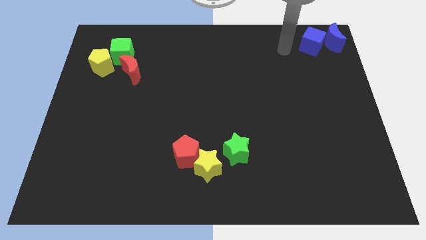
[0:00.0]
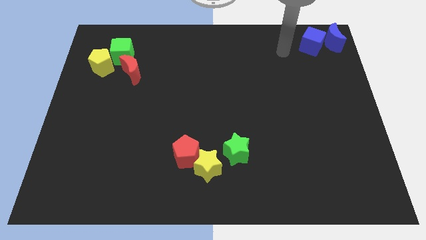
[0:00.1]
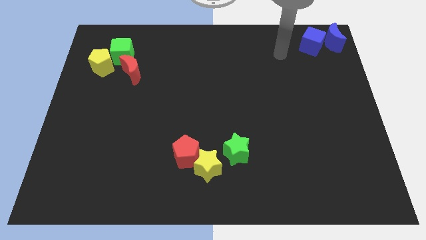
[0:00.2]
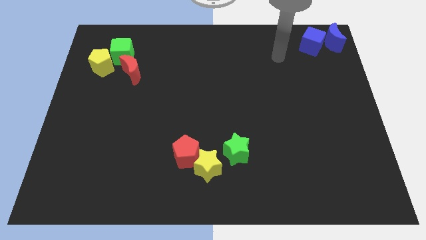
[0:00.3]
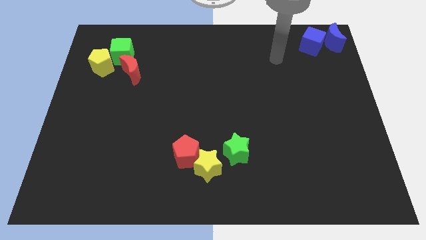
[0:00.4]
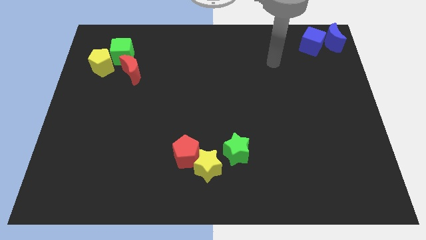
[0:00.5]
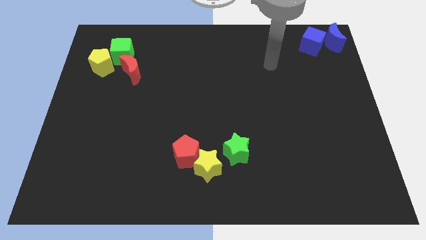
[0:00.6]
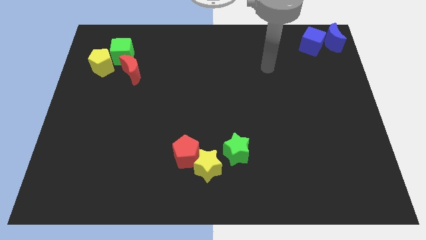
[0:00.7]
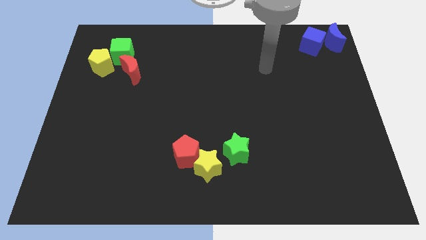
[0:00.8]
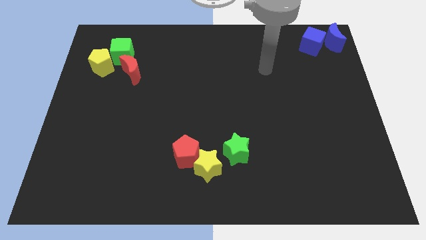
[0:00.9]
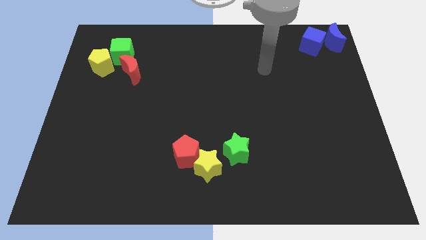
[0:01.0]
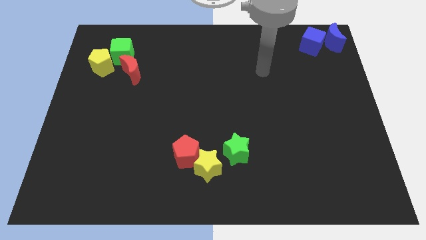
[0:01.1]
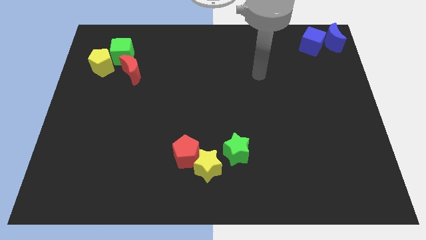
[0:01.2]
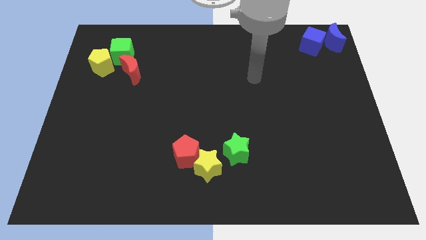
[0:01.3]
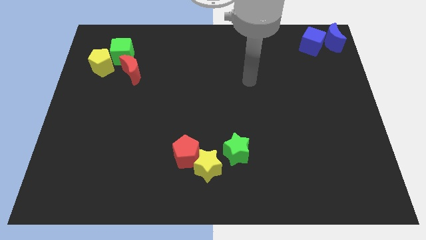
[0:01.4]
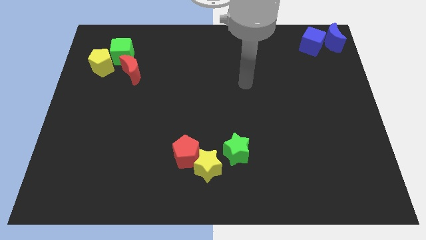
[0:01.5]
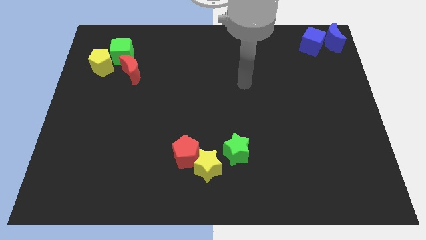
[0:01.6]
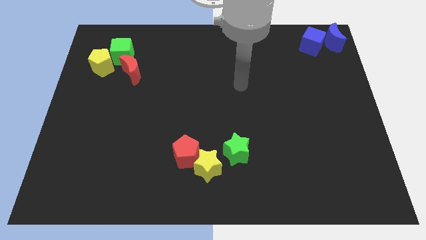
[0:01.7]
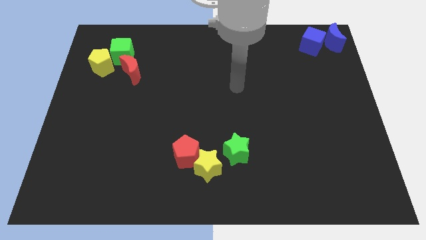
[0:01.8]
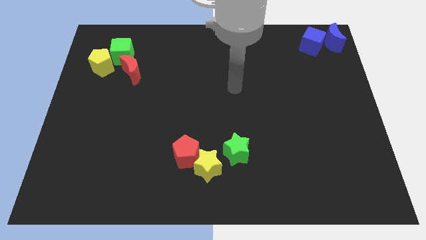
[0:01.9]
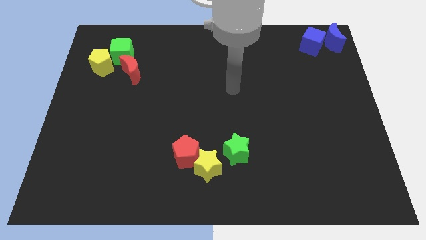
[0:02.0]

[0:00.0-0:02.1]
place your hand at center of the board

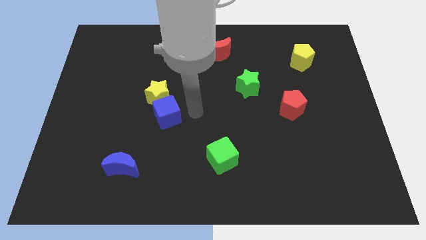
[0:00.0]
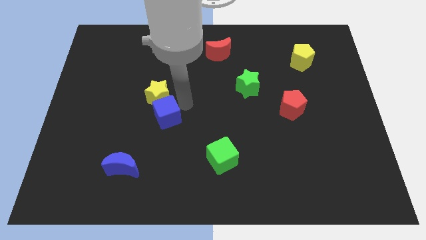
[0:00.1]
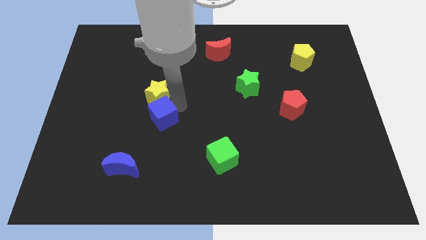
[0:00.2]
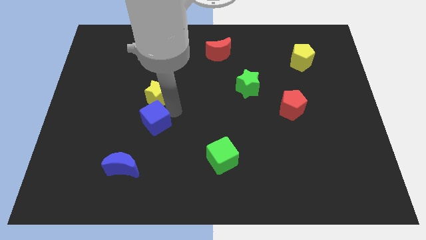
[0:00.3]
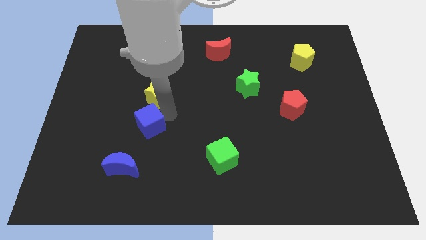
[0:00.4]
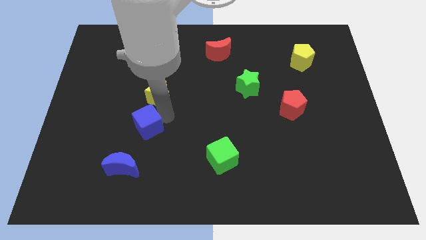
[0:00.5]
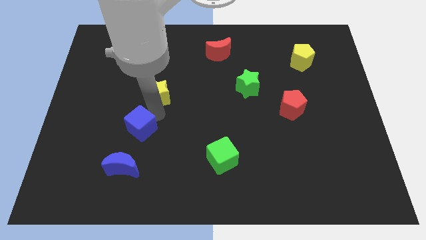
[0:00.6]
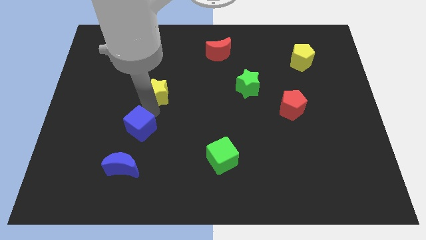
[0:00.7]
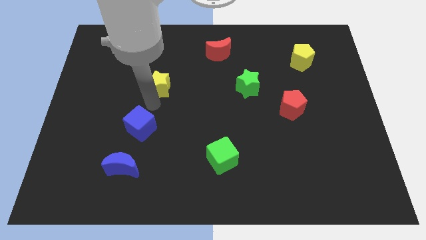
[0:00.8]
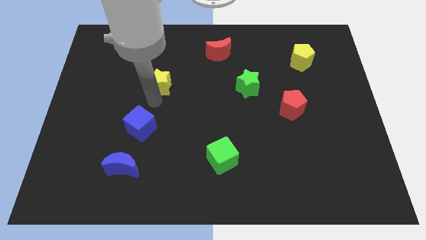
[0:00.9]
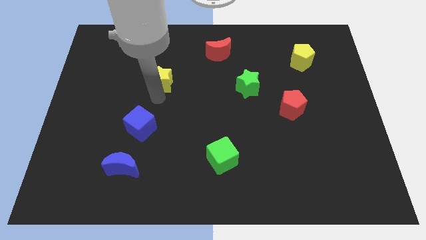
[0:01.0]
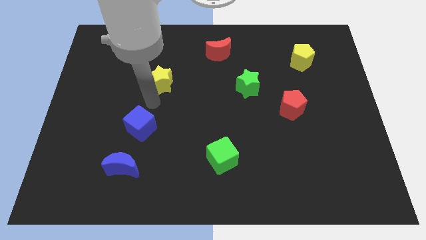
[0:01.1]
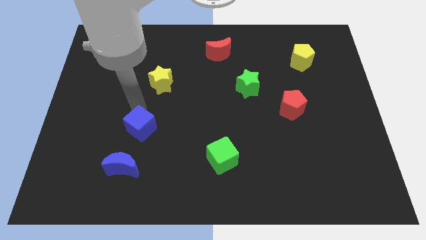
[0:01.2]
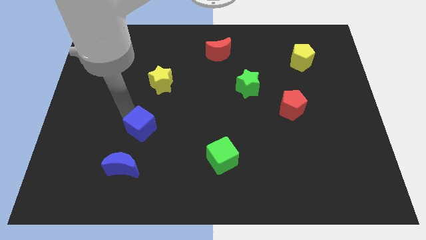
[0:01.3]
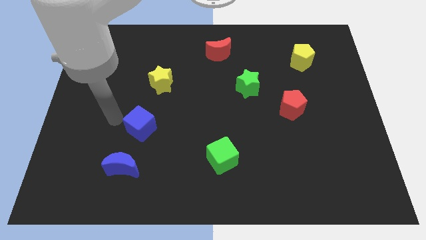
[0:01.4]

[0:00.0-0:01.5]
separate the yellow star and the blue cube

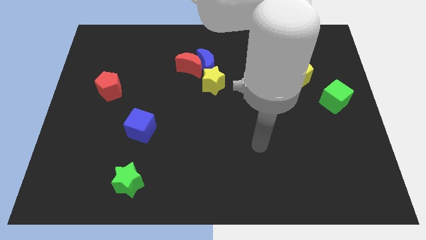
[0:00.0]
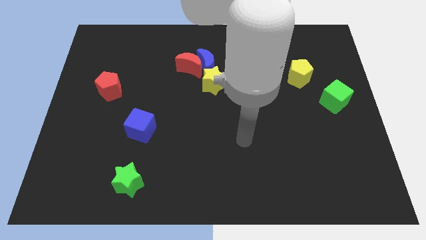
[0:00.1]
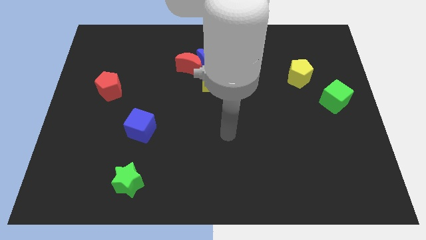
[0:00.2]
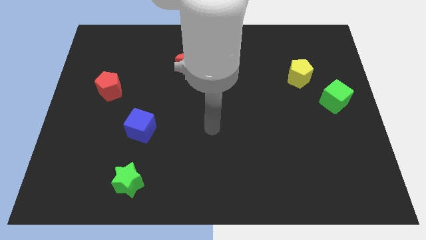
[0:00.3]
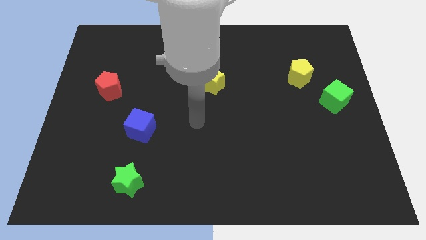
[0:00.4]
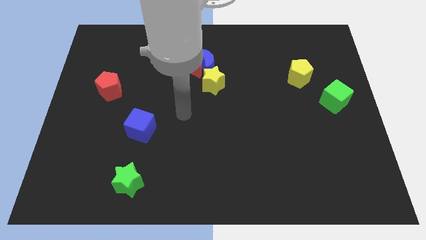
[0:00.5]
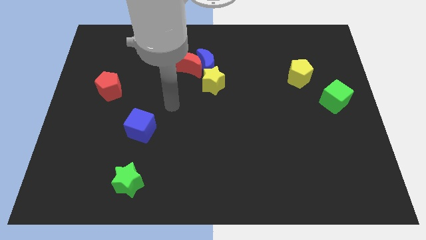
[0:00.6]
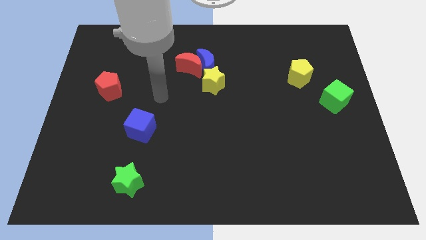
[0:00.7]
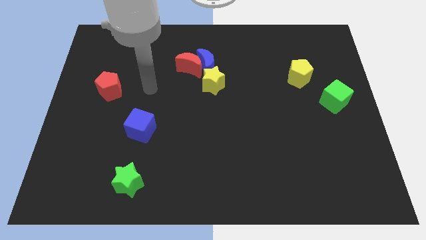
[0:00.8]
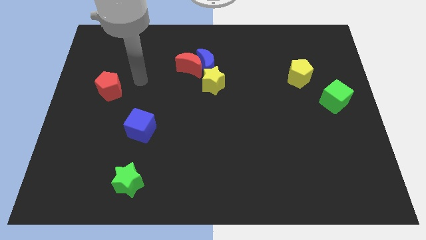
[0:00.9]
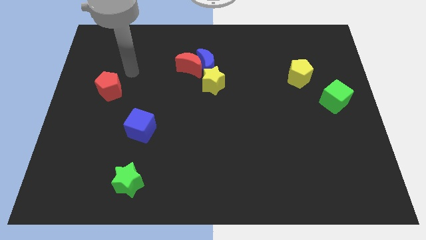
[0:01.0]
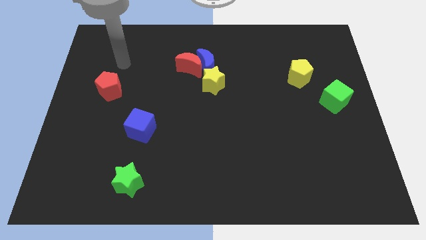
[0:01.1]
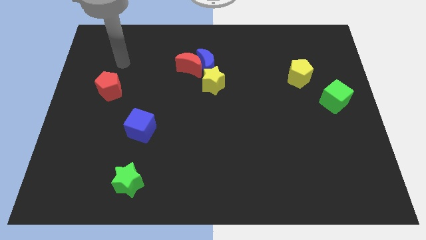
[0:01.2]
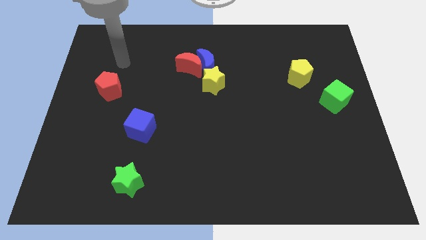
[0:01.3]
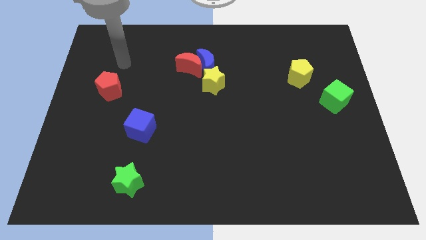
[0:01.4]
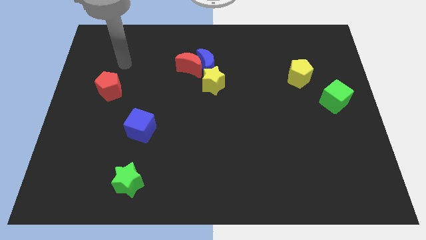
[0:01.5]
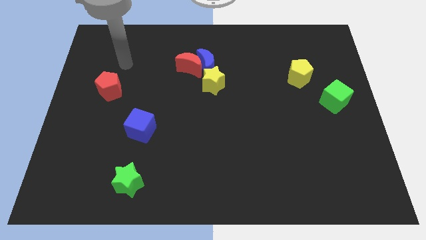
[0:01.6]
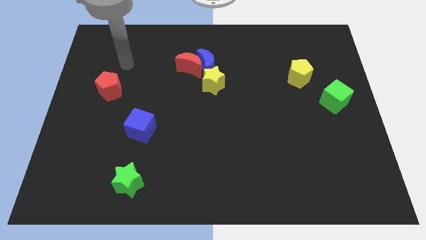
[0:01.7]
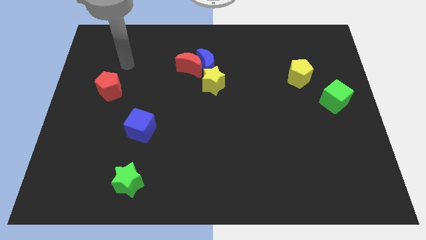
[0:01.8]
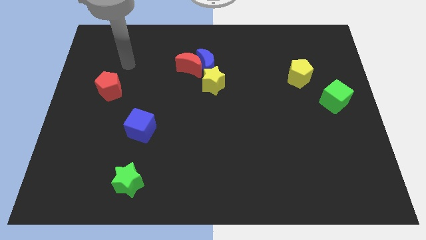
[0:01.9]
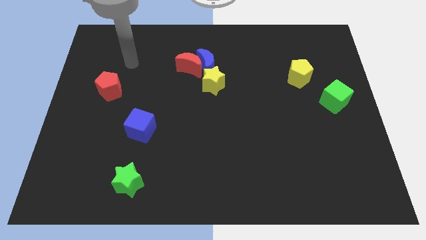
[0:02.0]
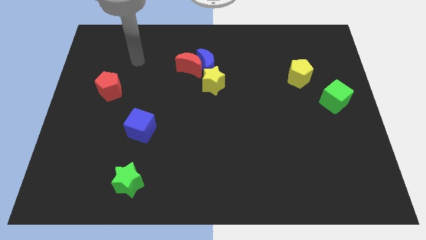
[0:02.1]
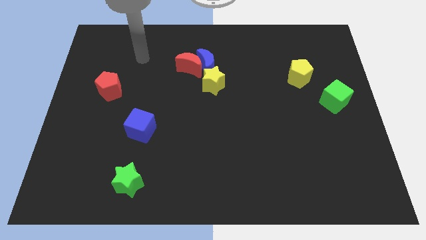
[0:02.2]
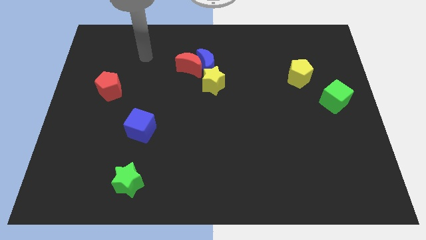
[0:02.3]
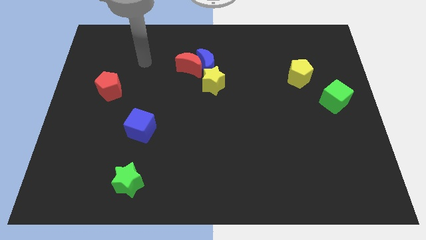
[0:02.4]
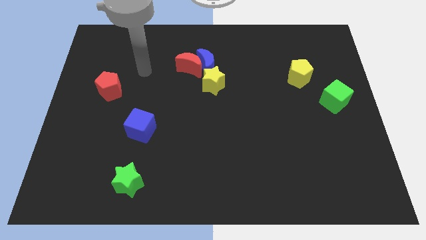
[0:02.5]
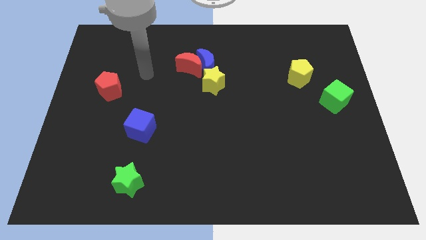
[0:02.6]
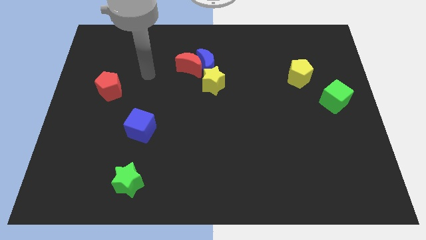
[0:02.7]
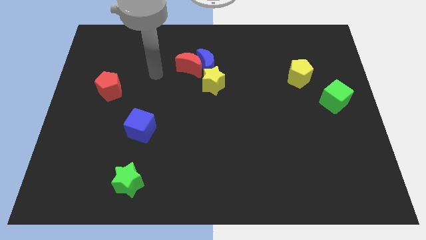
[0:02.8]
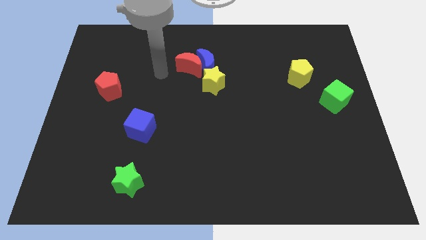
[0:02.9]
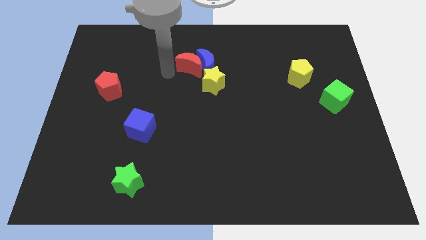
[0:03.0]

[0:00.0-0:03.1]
point your arm at the left of the red crescent

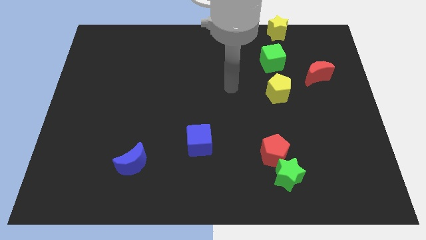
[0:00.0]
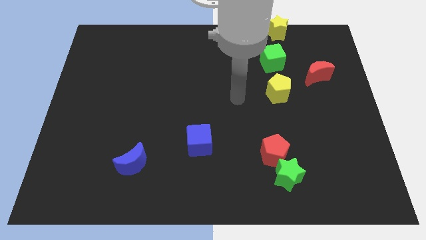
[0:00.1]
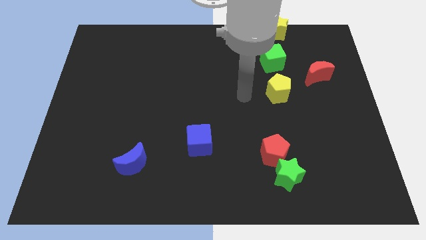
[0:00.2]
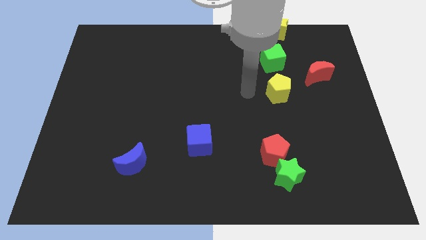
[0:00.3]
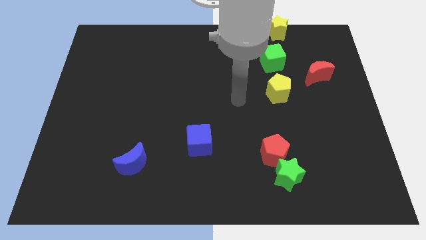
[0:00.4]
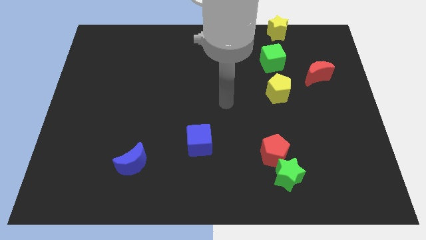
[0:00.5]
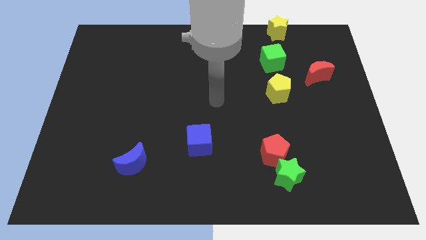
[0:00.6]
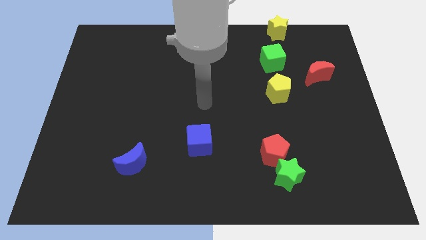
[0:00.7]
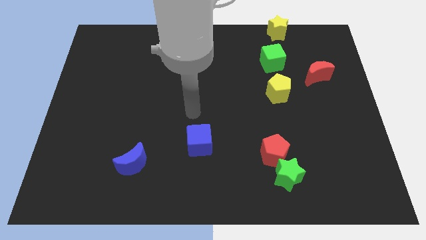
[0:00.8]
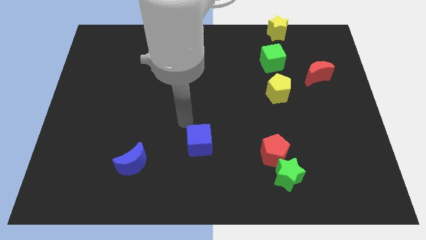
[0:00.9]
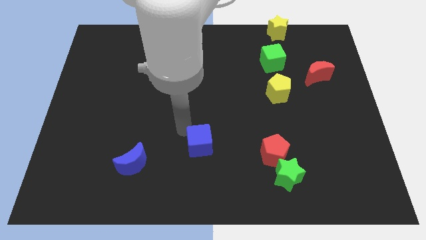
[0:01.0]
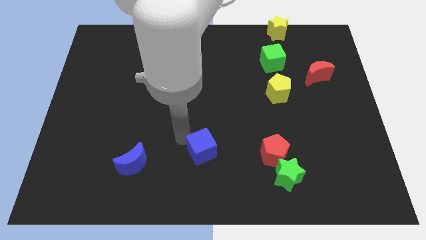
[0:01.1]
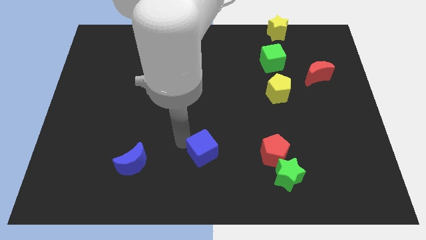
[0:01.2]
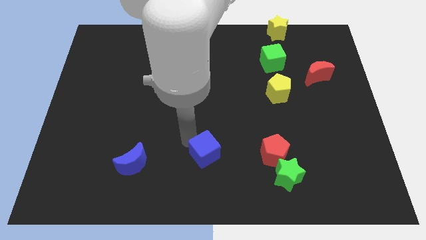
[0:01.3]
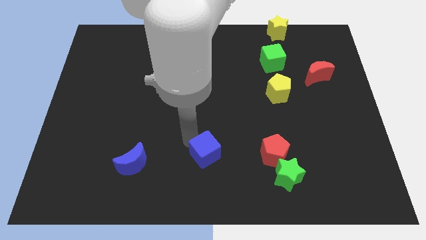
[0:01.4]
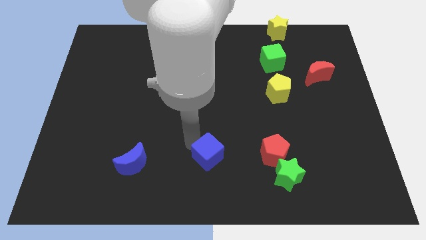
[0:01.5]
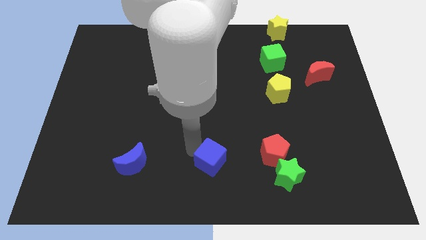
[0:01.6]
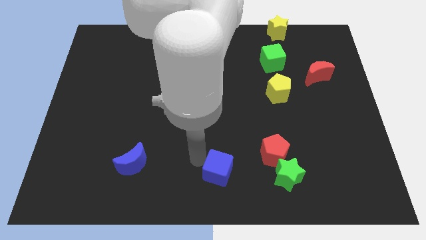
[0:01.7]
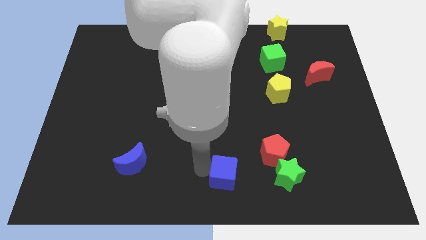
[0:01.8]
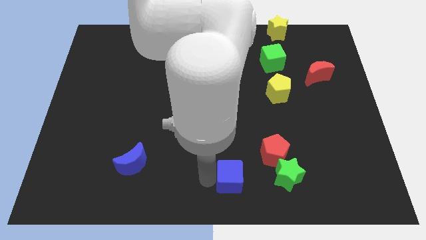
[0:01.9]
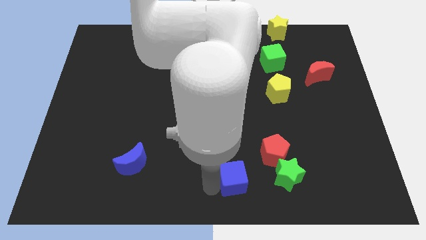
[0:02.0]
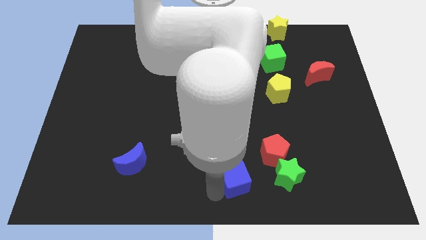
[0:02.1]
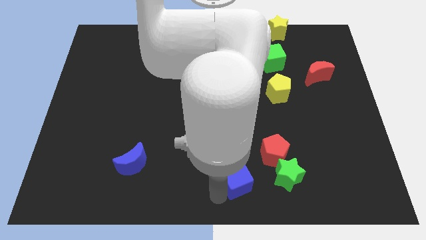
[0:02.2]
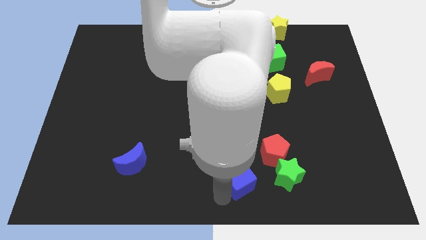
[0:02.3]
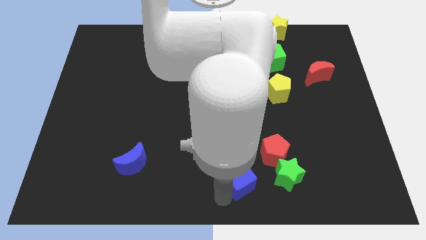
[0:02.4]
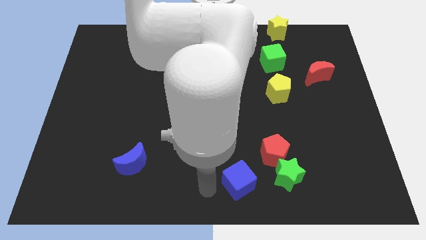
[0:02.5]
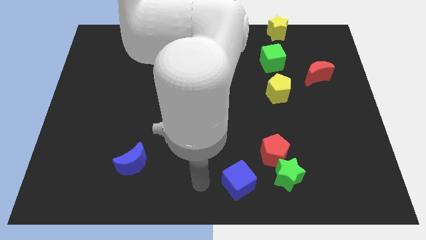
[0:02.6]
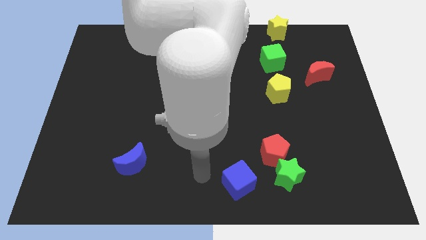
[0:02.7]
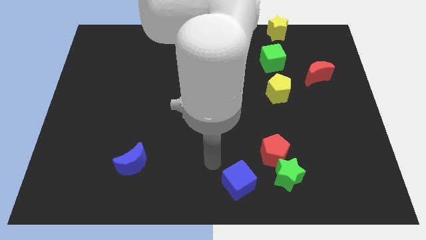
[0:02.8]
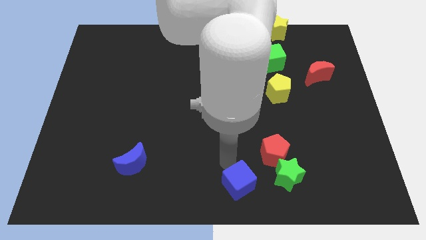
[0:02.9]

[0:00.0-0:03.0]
push the blue cube down to the bottom center of the board
